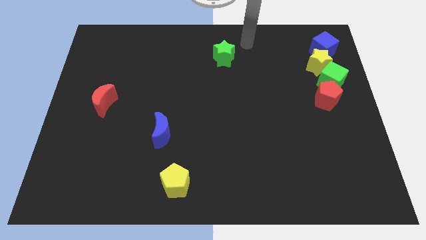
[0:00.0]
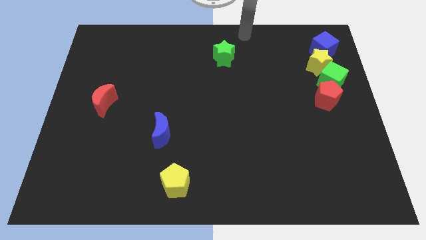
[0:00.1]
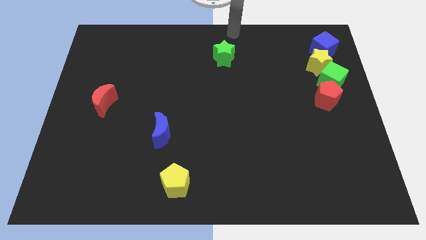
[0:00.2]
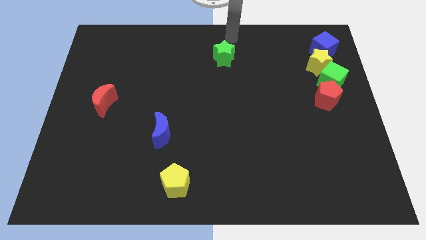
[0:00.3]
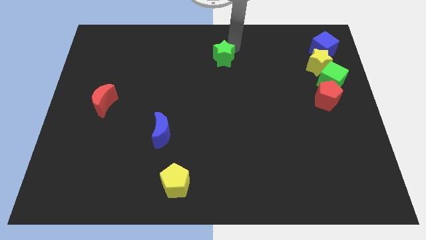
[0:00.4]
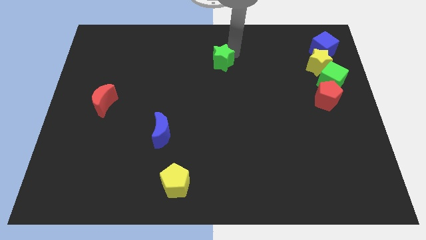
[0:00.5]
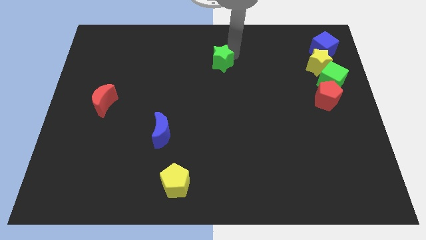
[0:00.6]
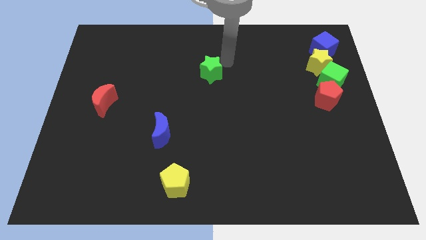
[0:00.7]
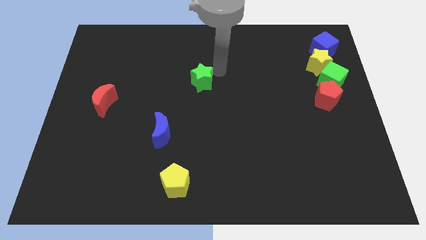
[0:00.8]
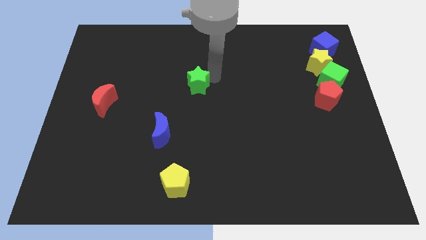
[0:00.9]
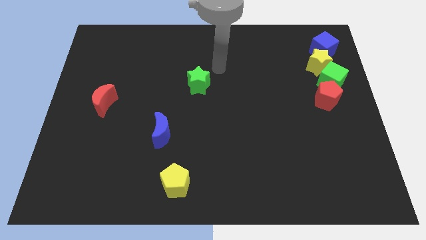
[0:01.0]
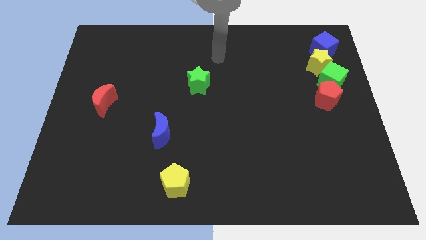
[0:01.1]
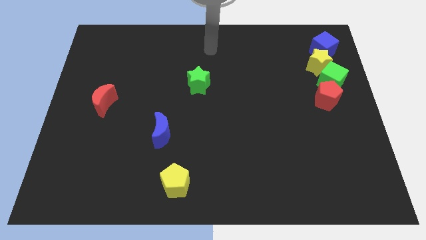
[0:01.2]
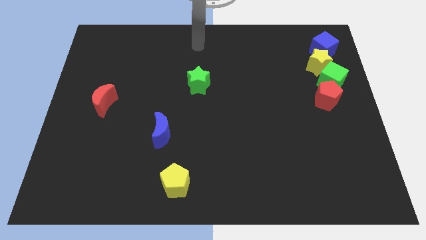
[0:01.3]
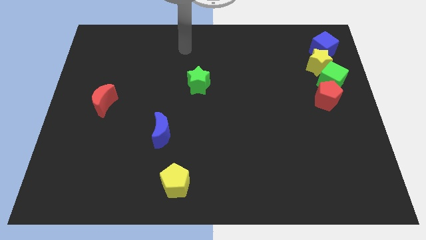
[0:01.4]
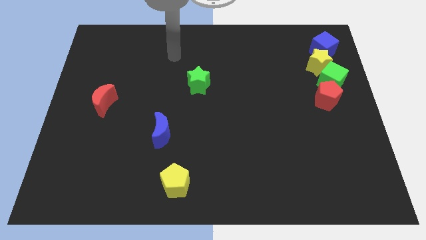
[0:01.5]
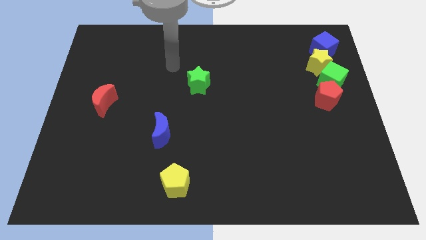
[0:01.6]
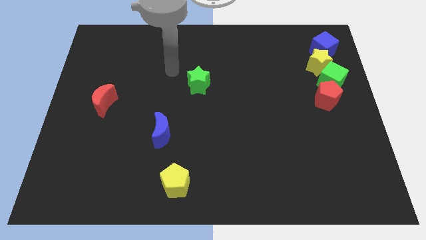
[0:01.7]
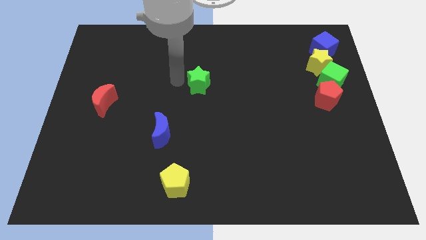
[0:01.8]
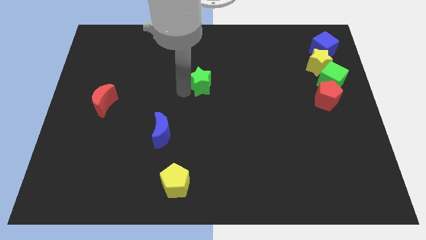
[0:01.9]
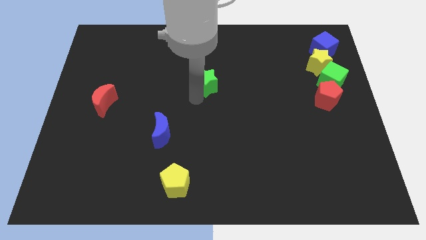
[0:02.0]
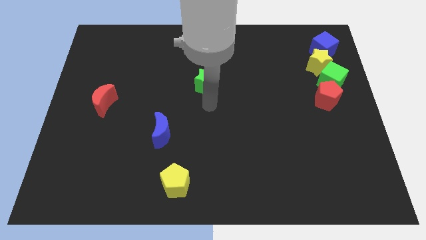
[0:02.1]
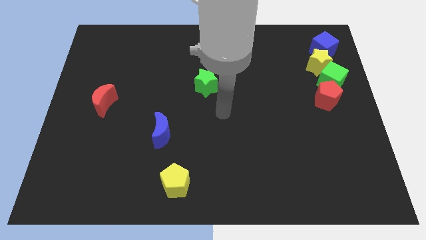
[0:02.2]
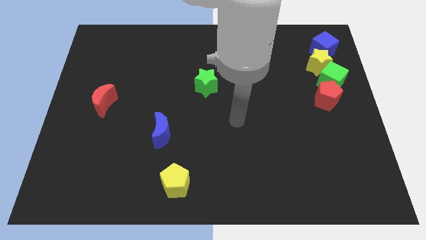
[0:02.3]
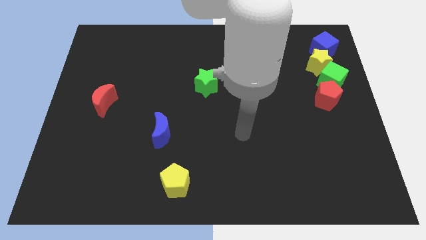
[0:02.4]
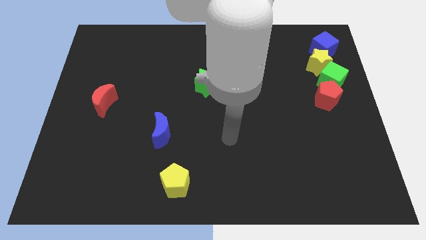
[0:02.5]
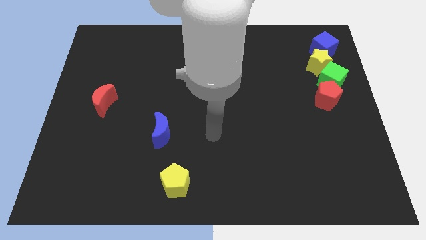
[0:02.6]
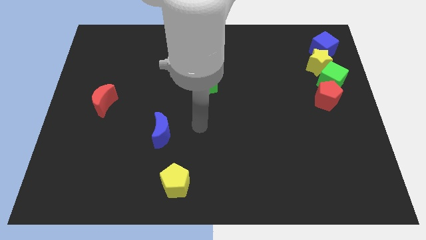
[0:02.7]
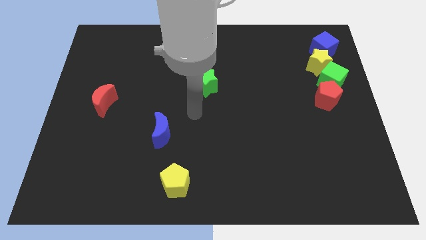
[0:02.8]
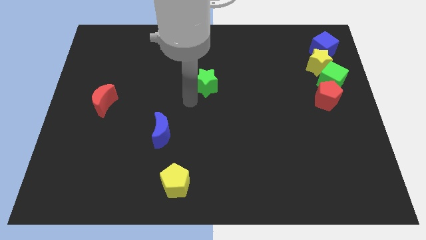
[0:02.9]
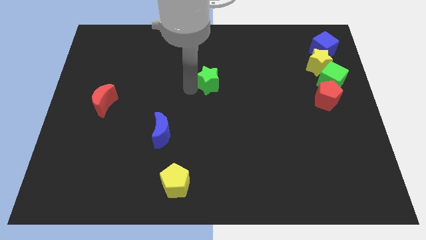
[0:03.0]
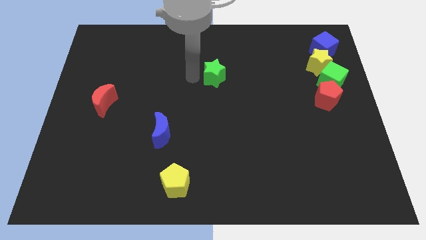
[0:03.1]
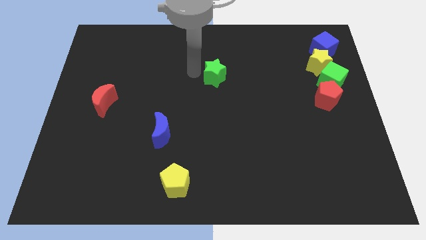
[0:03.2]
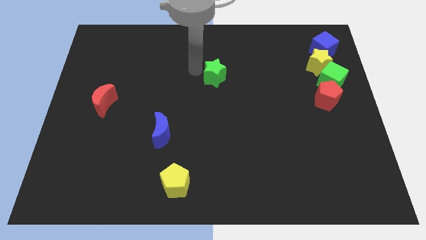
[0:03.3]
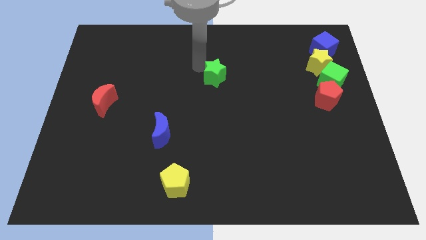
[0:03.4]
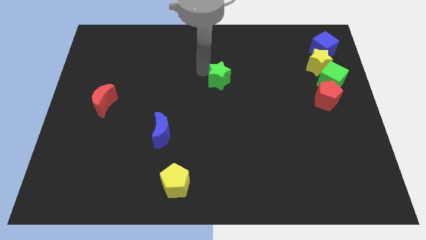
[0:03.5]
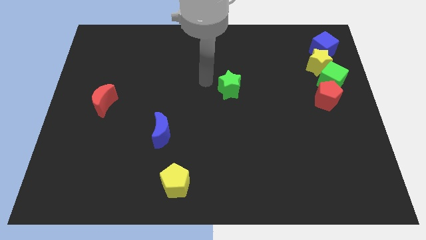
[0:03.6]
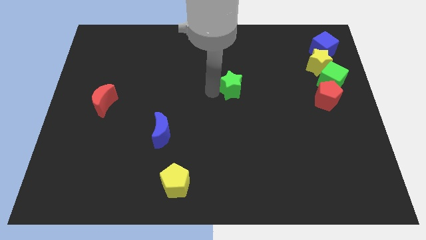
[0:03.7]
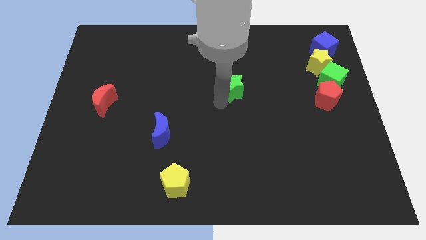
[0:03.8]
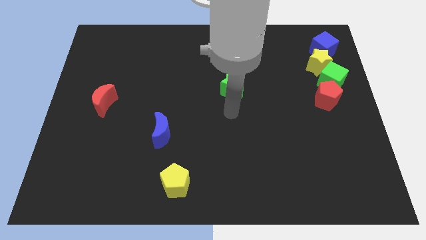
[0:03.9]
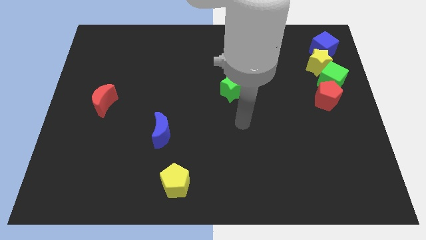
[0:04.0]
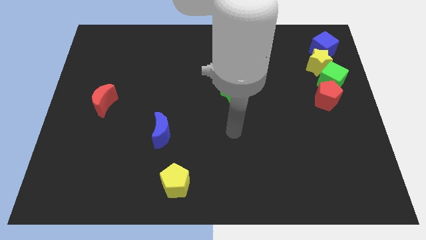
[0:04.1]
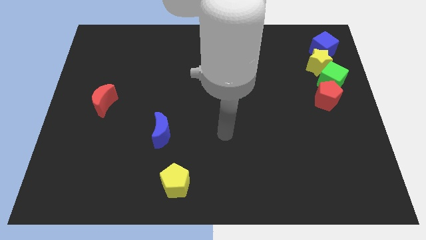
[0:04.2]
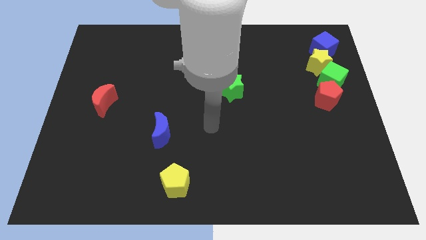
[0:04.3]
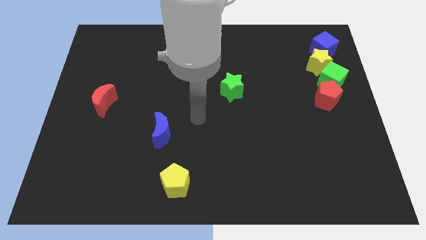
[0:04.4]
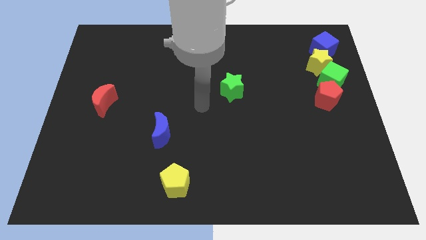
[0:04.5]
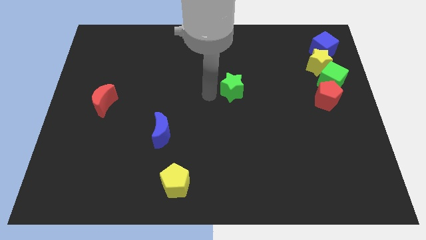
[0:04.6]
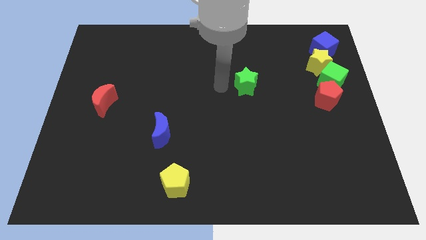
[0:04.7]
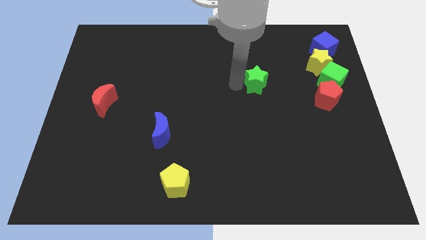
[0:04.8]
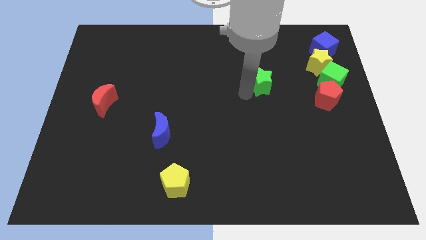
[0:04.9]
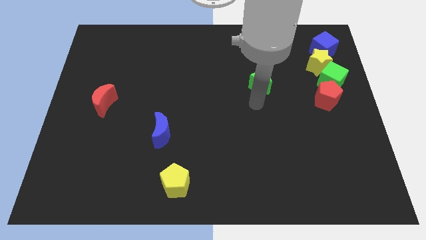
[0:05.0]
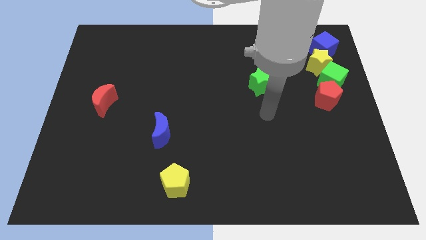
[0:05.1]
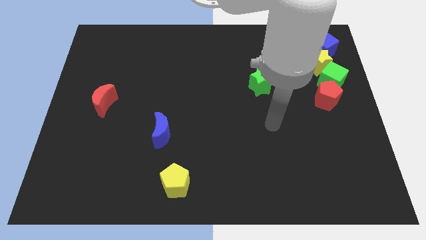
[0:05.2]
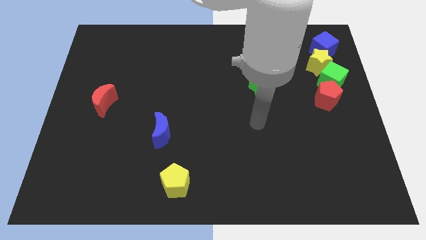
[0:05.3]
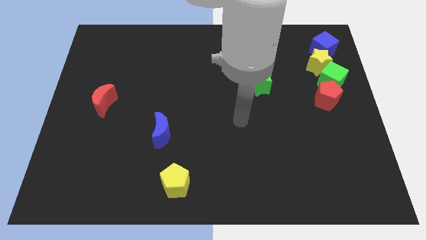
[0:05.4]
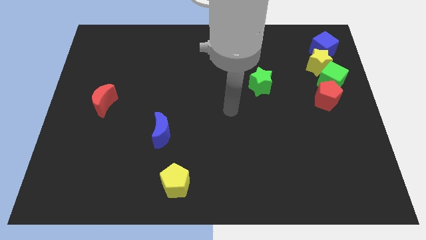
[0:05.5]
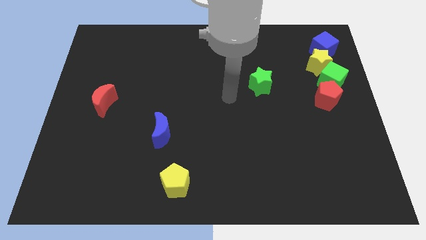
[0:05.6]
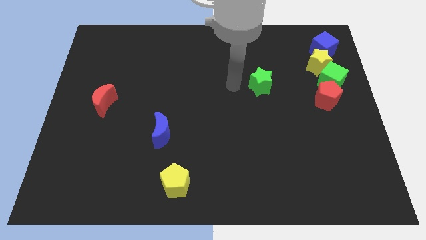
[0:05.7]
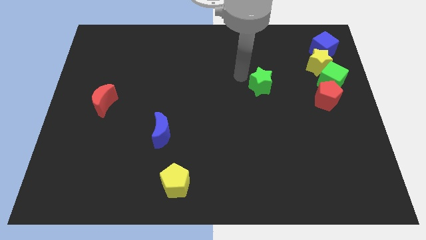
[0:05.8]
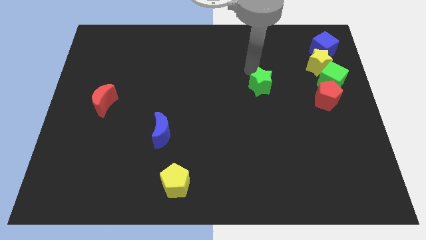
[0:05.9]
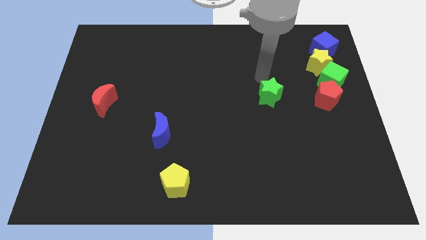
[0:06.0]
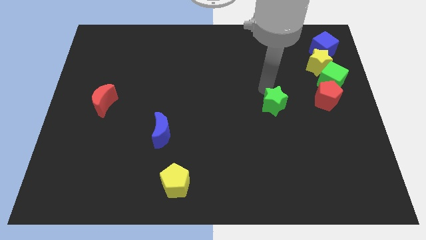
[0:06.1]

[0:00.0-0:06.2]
place the green star left to the red pentagon

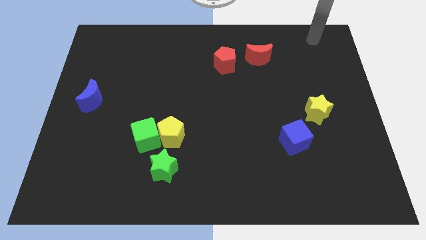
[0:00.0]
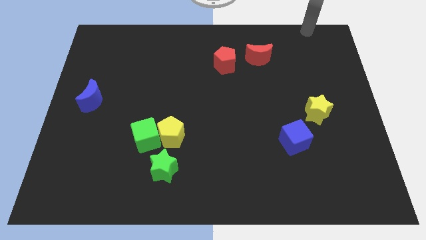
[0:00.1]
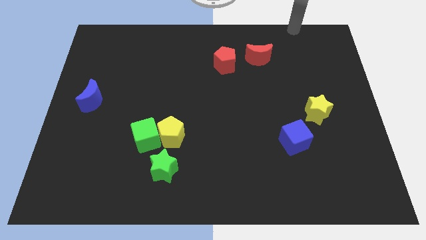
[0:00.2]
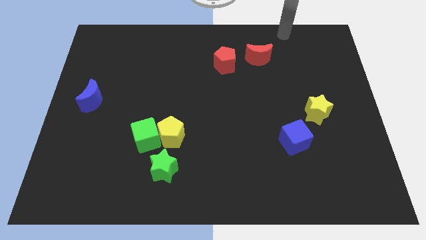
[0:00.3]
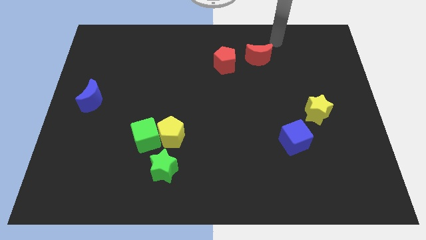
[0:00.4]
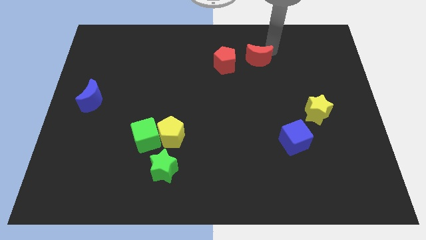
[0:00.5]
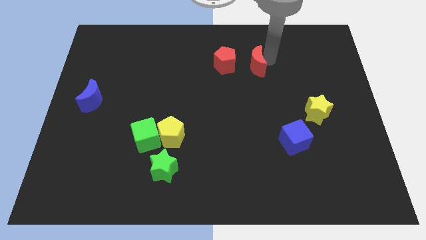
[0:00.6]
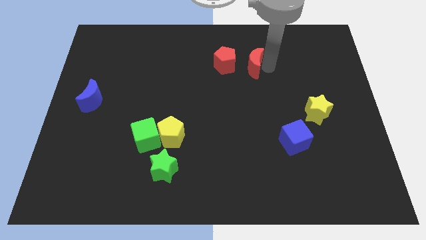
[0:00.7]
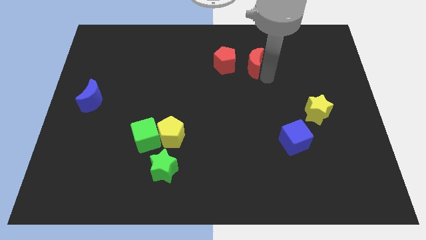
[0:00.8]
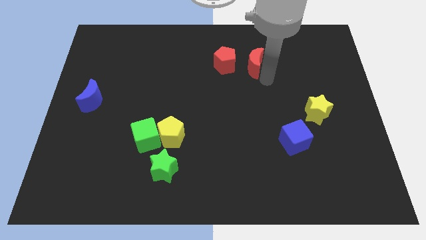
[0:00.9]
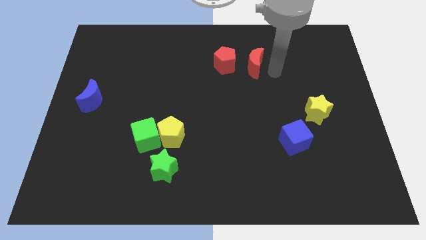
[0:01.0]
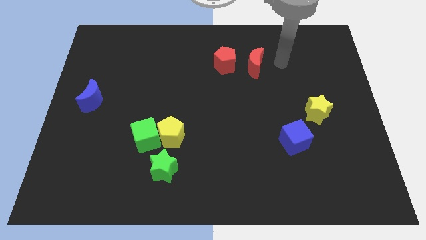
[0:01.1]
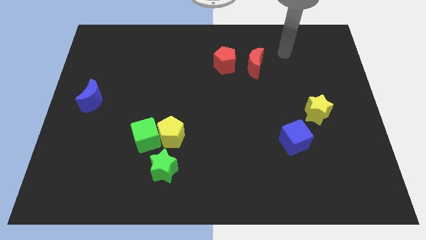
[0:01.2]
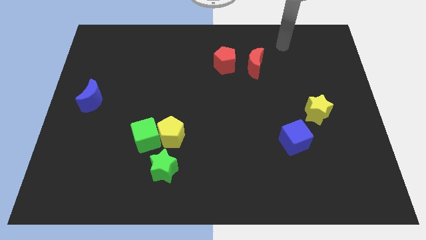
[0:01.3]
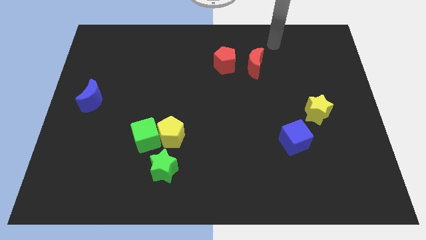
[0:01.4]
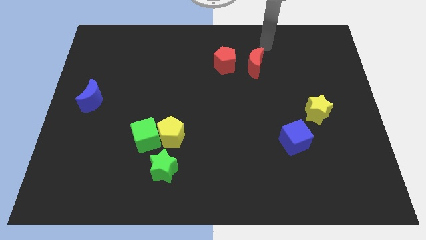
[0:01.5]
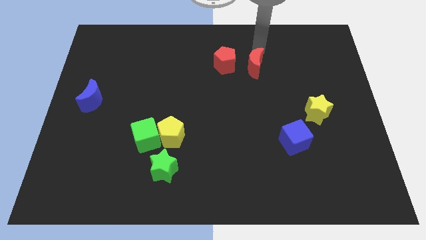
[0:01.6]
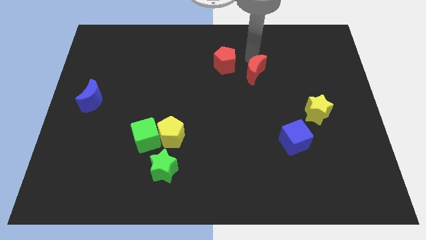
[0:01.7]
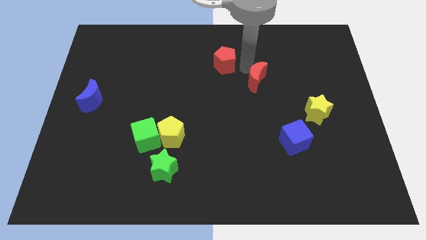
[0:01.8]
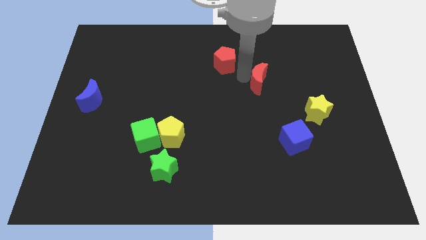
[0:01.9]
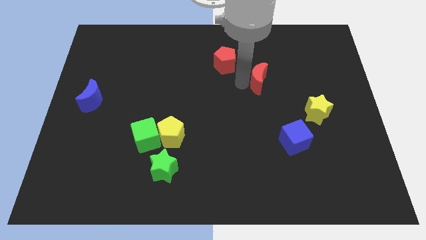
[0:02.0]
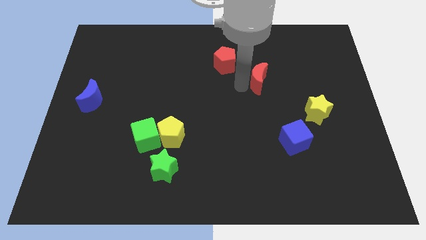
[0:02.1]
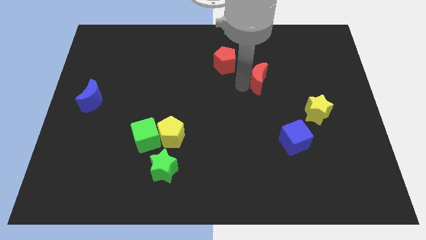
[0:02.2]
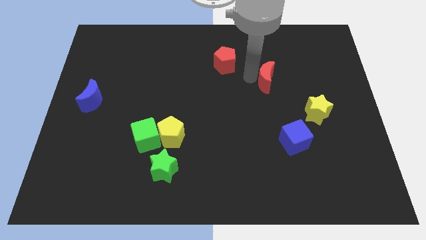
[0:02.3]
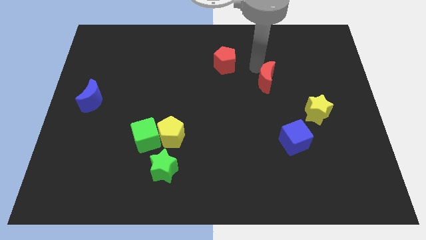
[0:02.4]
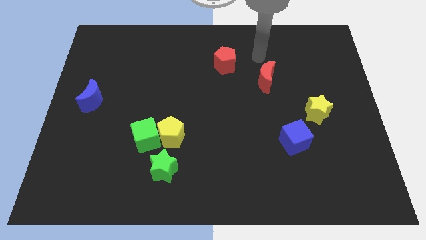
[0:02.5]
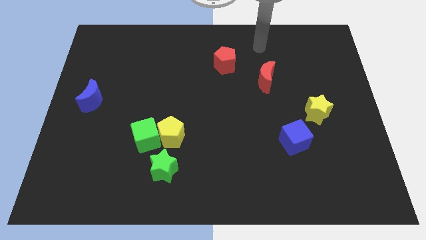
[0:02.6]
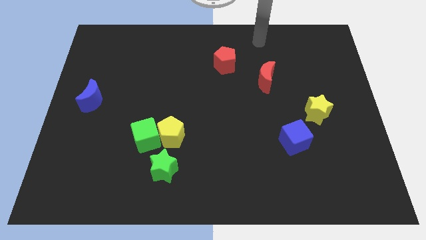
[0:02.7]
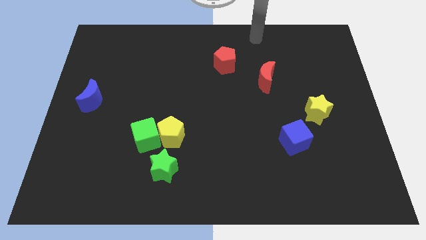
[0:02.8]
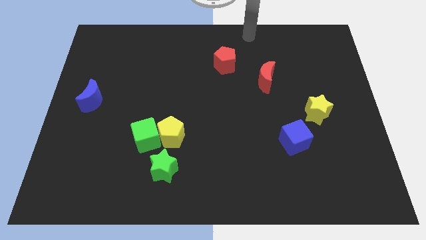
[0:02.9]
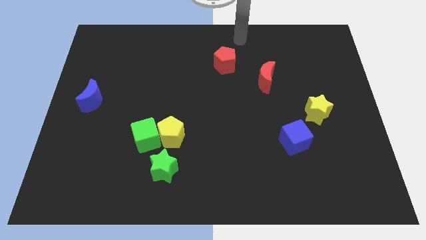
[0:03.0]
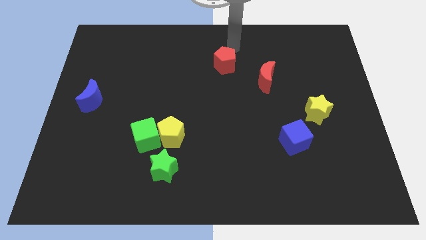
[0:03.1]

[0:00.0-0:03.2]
place red crescent between red pentagon and yellow star
